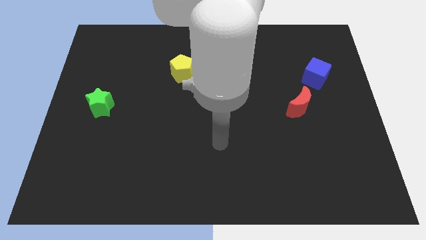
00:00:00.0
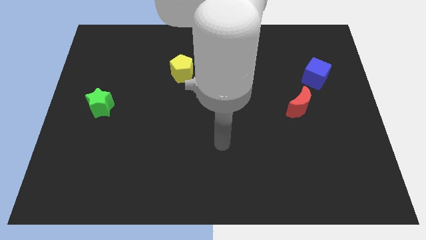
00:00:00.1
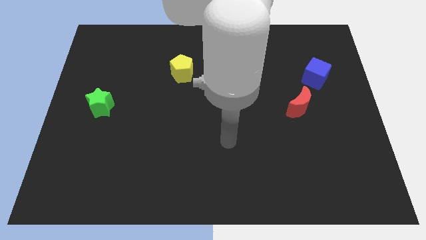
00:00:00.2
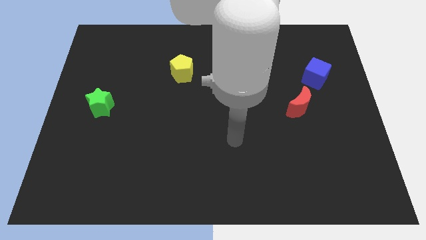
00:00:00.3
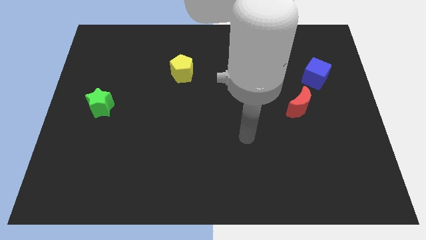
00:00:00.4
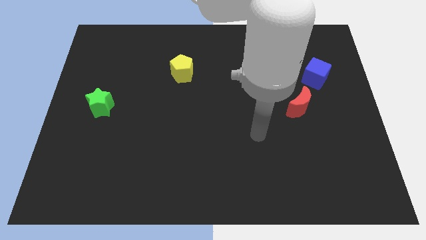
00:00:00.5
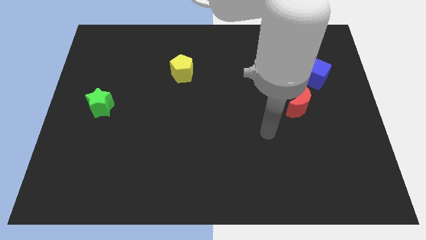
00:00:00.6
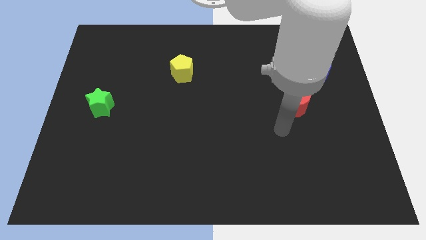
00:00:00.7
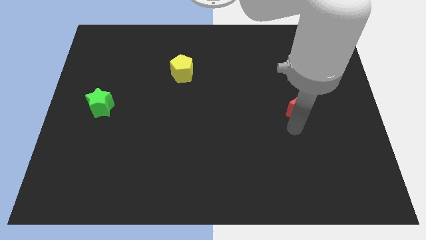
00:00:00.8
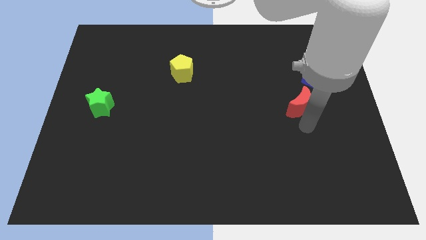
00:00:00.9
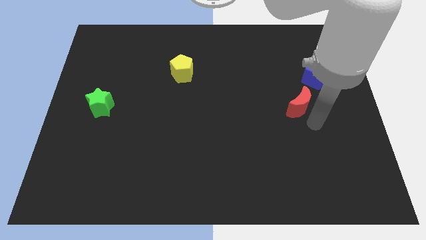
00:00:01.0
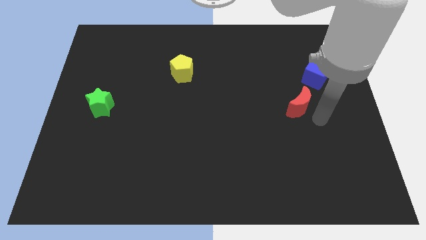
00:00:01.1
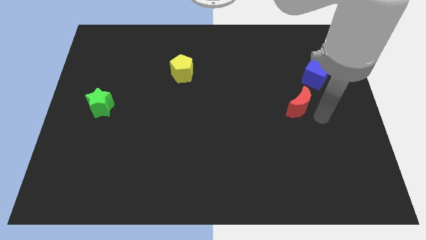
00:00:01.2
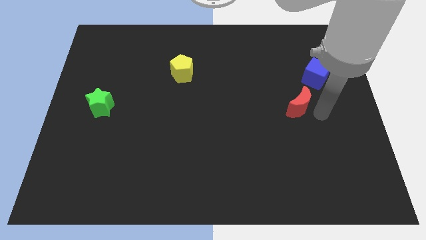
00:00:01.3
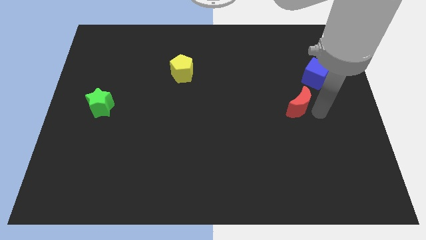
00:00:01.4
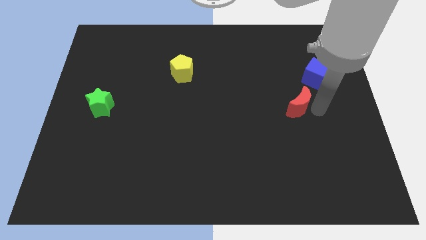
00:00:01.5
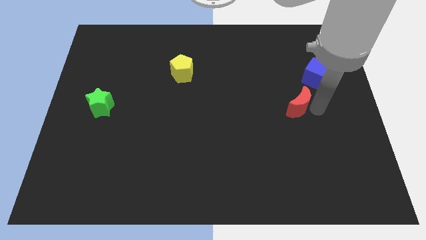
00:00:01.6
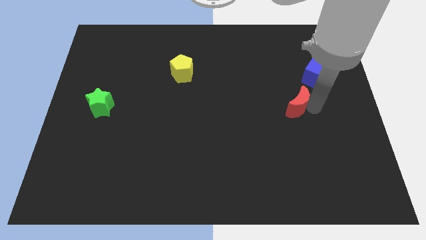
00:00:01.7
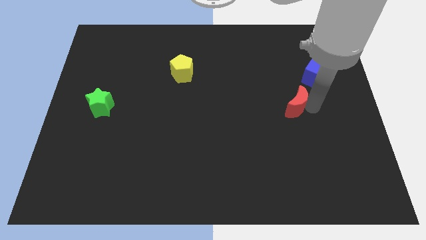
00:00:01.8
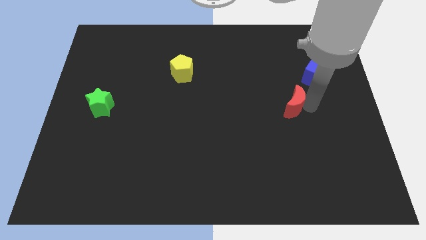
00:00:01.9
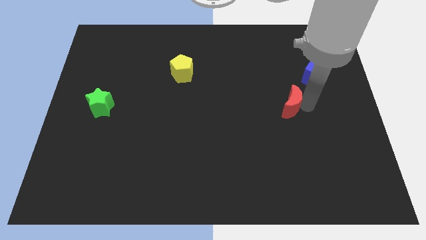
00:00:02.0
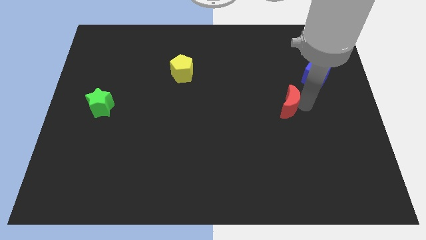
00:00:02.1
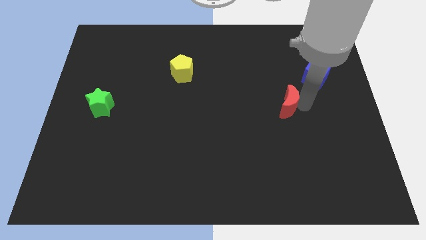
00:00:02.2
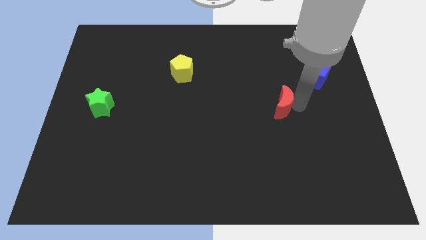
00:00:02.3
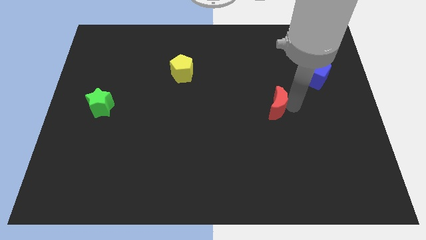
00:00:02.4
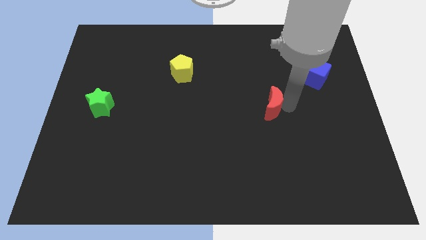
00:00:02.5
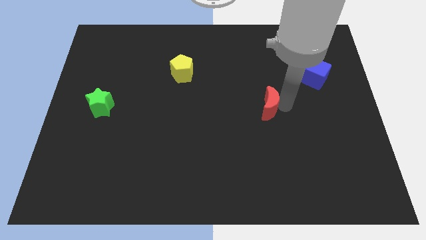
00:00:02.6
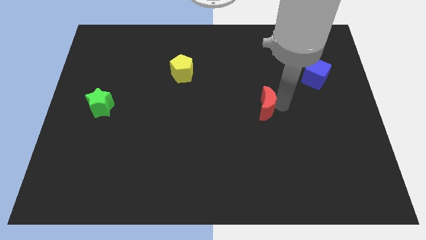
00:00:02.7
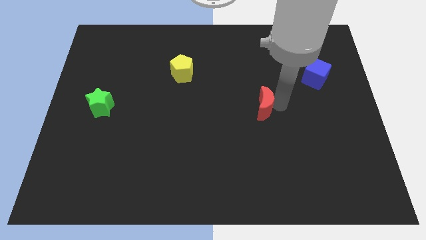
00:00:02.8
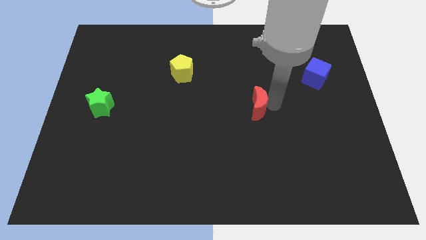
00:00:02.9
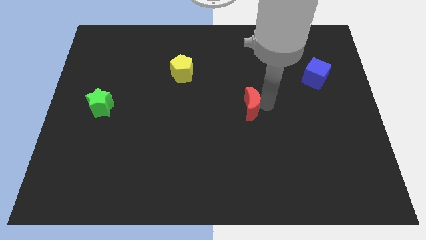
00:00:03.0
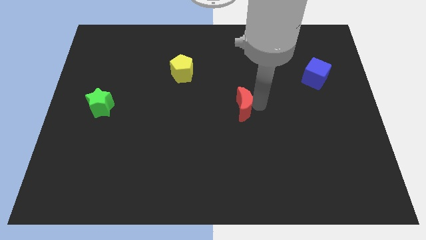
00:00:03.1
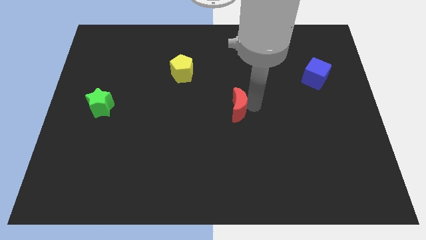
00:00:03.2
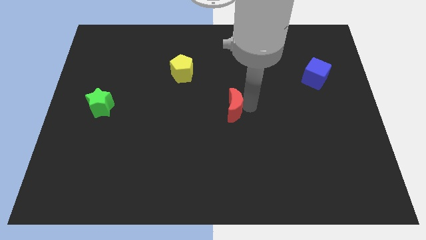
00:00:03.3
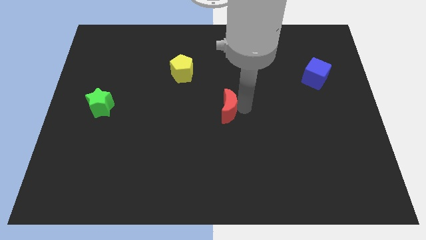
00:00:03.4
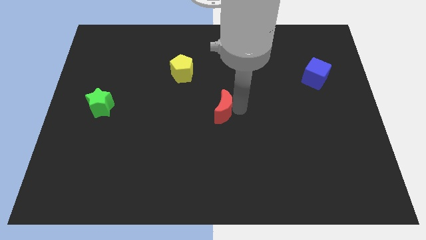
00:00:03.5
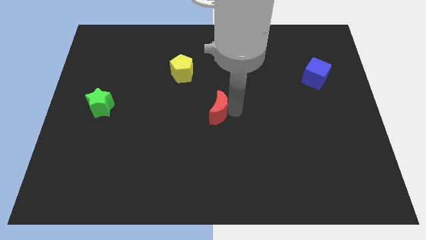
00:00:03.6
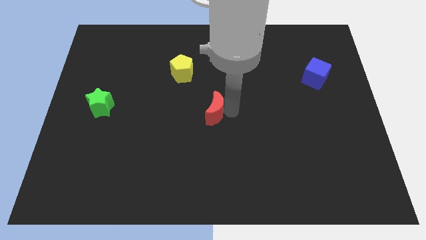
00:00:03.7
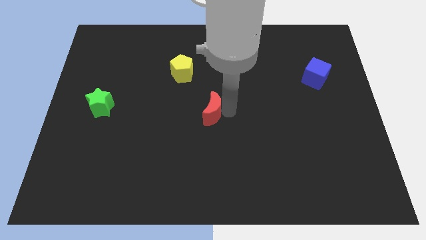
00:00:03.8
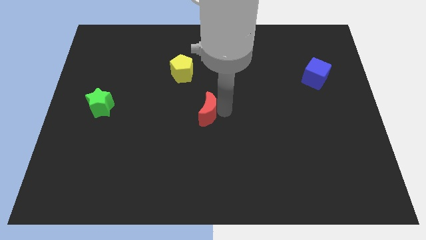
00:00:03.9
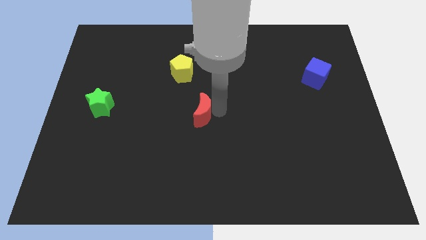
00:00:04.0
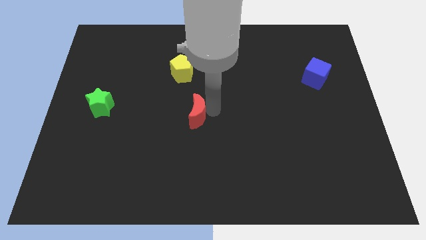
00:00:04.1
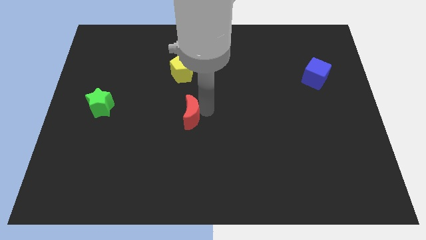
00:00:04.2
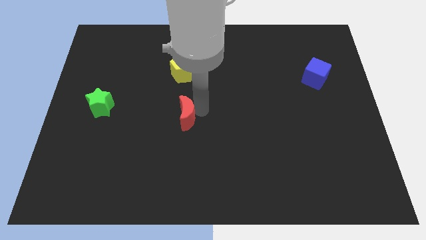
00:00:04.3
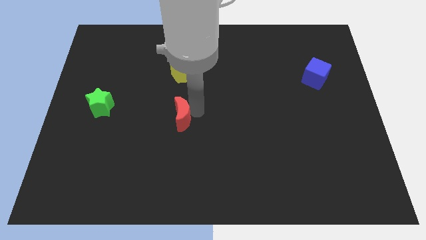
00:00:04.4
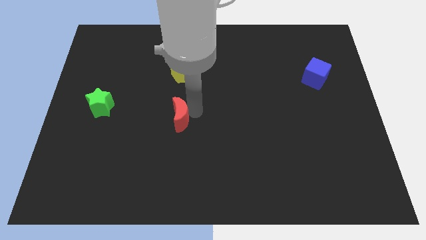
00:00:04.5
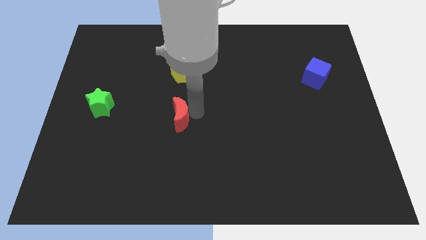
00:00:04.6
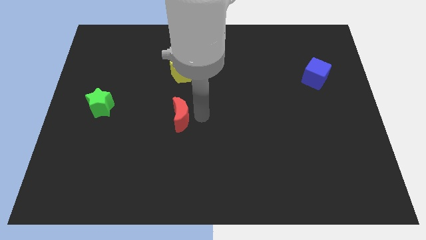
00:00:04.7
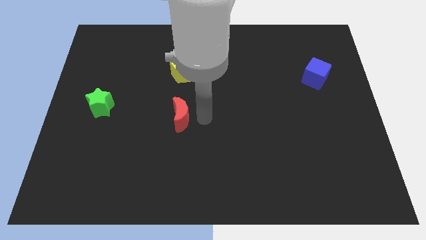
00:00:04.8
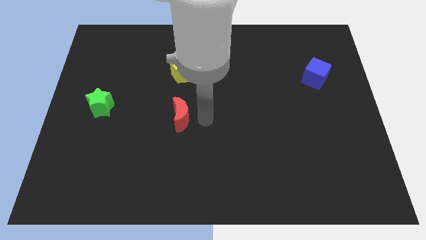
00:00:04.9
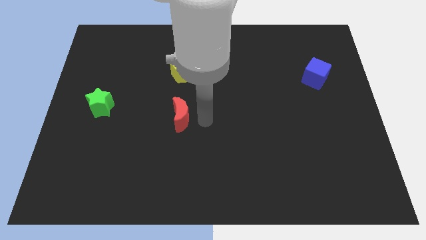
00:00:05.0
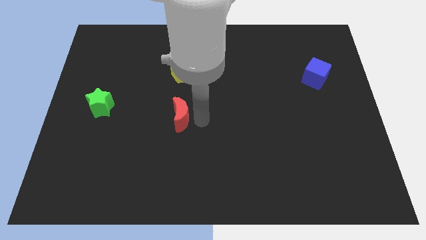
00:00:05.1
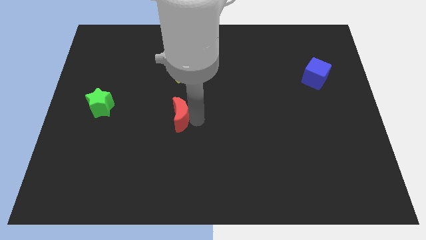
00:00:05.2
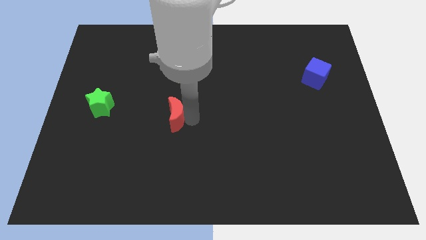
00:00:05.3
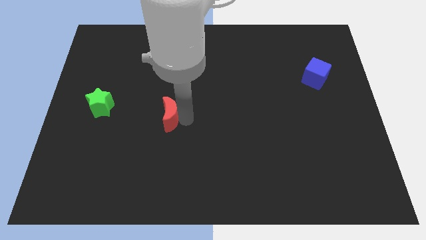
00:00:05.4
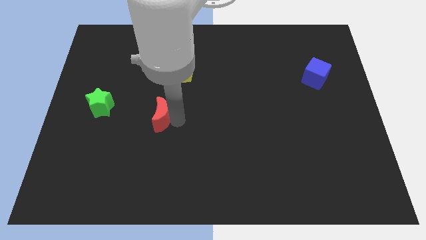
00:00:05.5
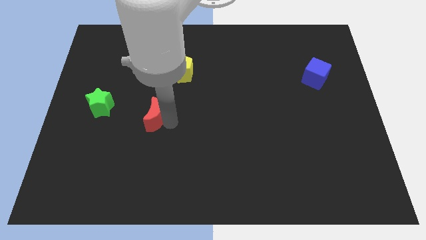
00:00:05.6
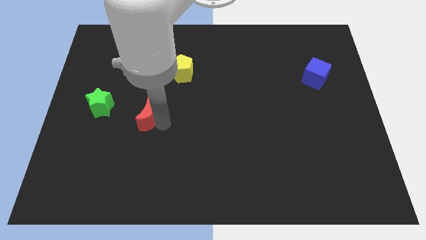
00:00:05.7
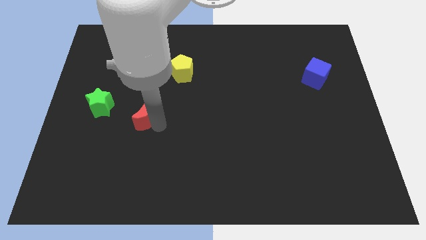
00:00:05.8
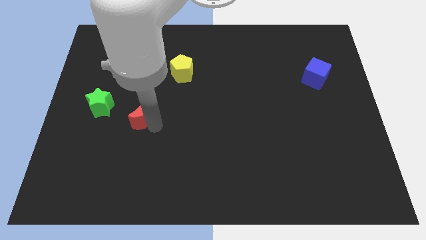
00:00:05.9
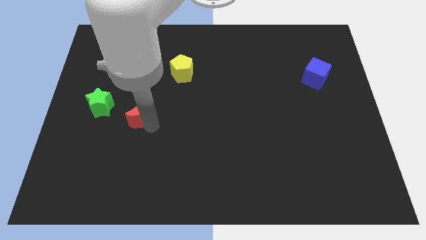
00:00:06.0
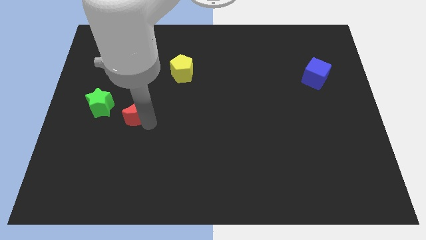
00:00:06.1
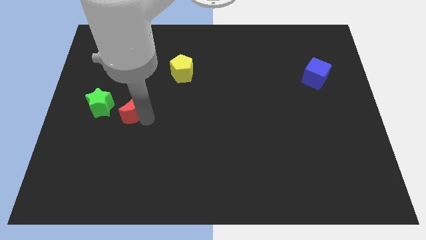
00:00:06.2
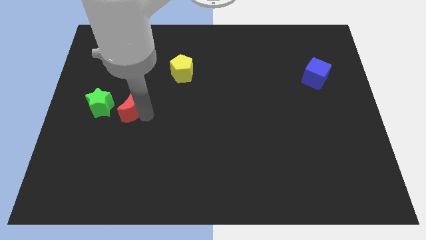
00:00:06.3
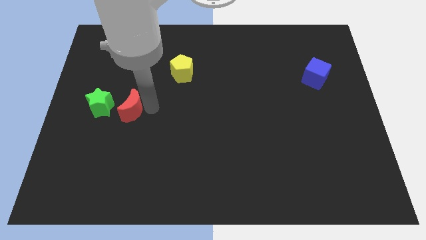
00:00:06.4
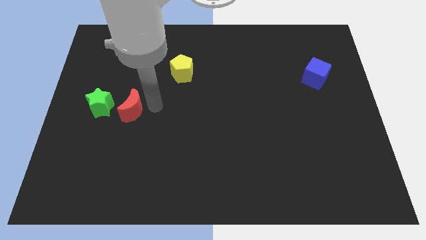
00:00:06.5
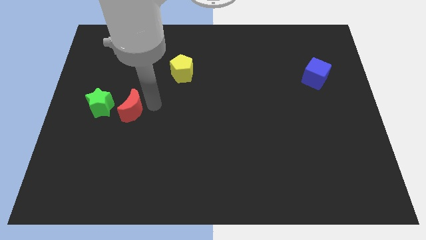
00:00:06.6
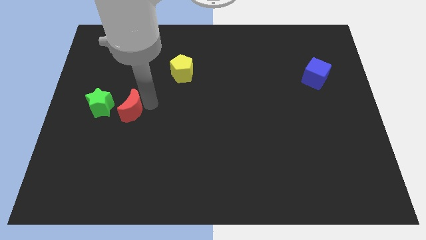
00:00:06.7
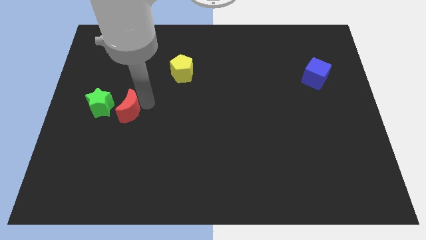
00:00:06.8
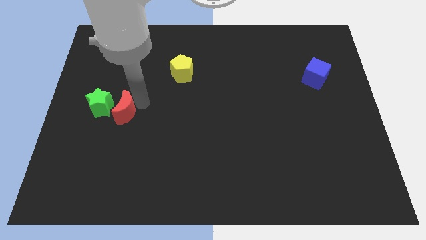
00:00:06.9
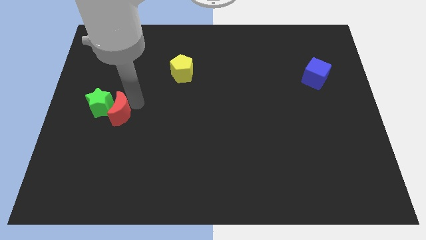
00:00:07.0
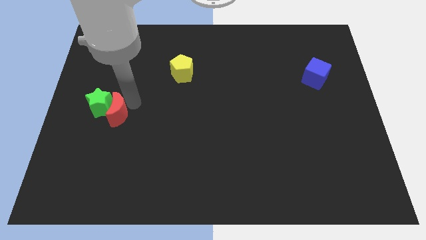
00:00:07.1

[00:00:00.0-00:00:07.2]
push the red block next to the star

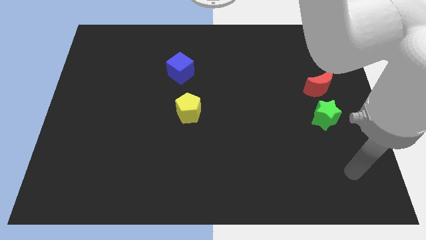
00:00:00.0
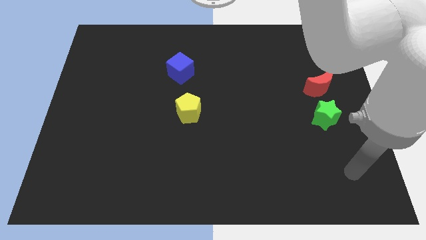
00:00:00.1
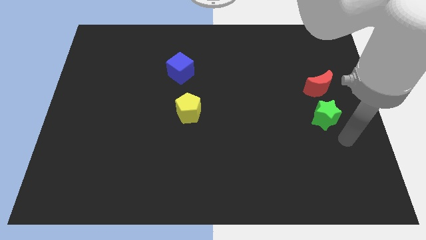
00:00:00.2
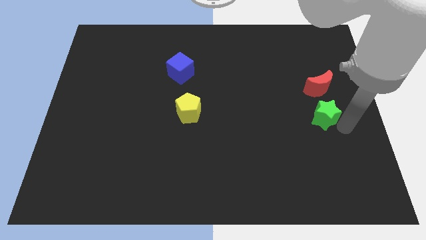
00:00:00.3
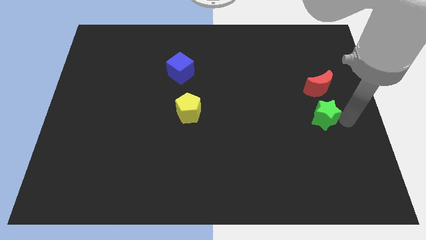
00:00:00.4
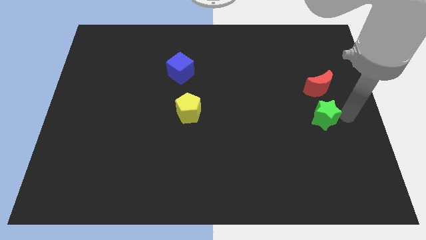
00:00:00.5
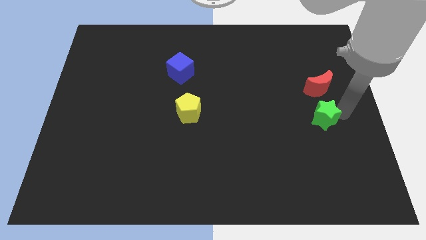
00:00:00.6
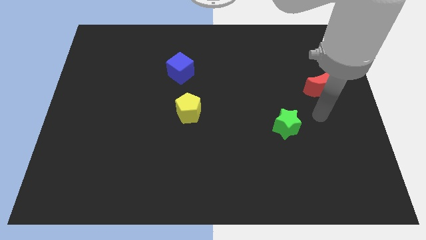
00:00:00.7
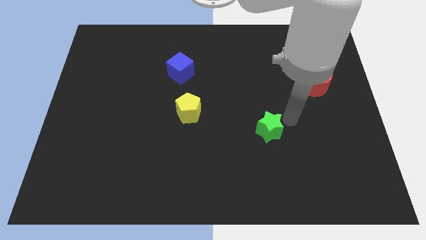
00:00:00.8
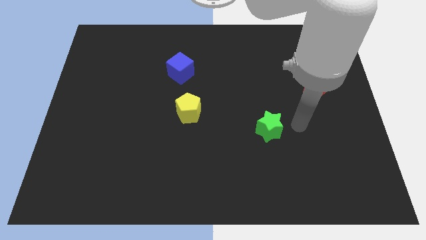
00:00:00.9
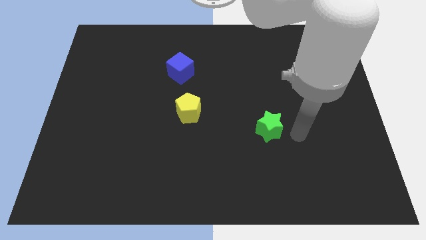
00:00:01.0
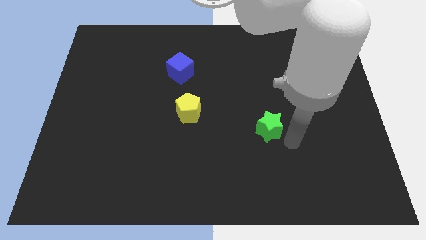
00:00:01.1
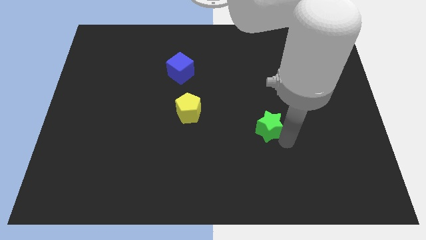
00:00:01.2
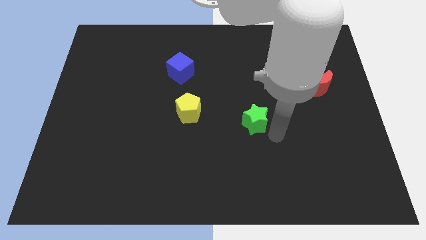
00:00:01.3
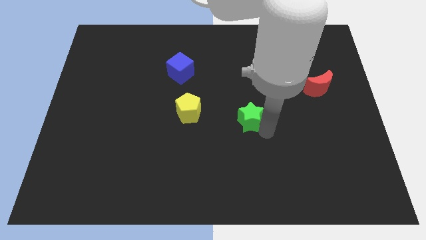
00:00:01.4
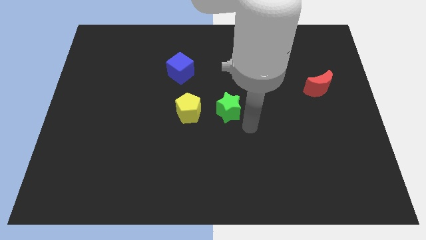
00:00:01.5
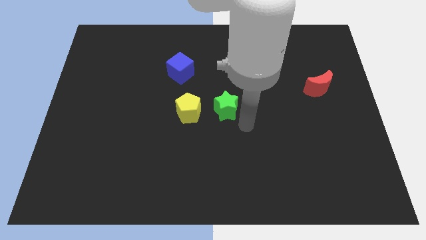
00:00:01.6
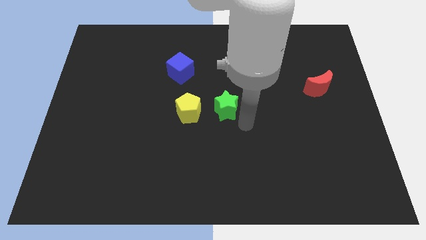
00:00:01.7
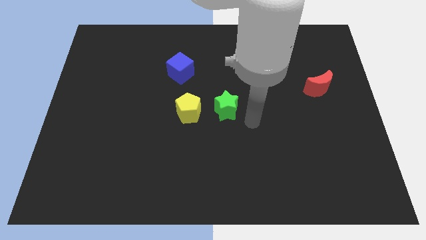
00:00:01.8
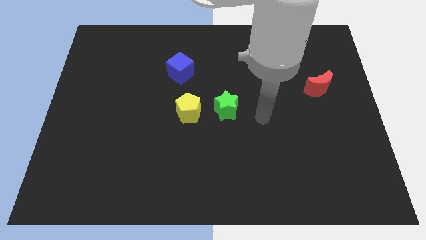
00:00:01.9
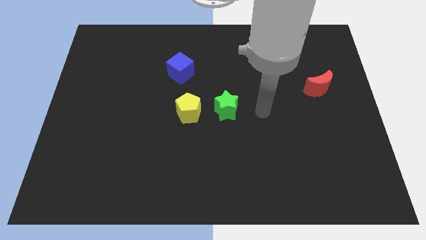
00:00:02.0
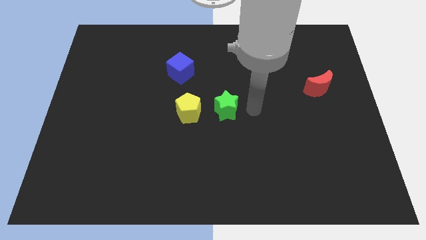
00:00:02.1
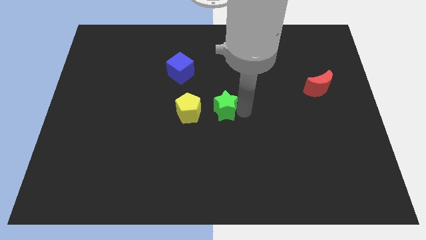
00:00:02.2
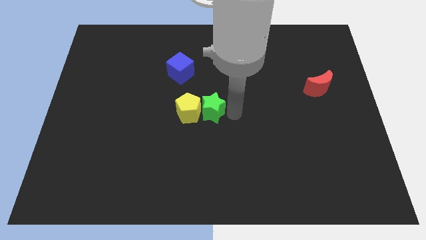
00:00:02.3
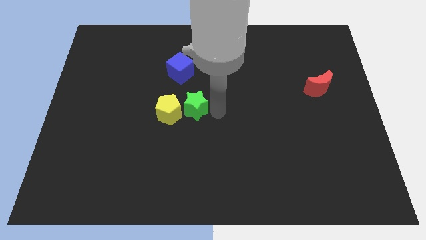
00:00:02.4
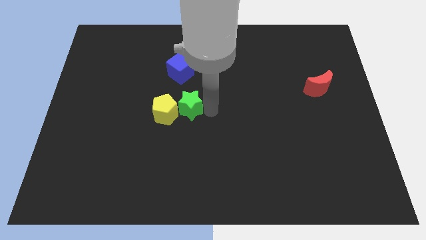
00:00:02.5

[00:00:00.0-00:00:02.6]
slide the star towards the pentagon
